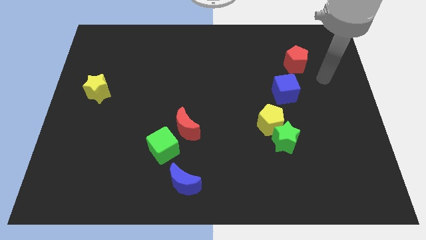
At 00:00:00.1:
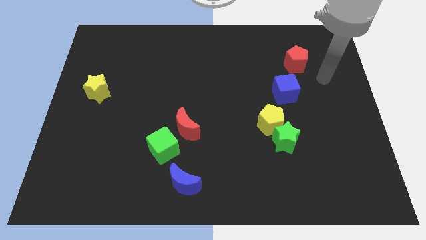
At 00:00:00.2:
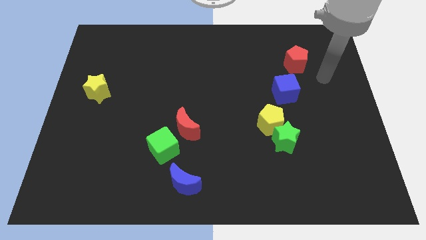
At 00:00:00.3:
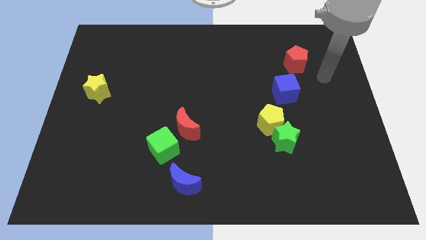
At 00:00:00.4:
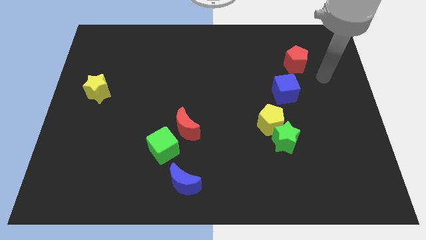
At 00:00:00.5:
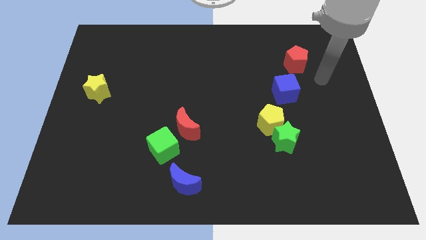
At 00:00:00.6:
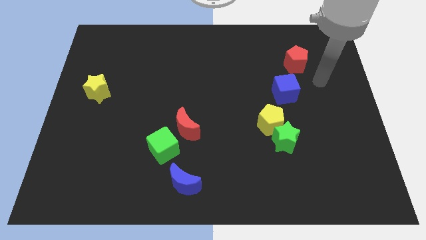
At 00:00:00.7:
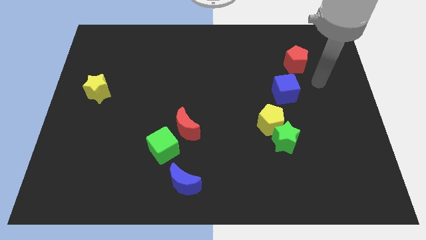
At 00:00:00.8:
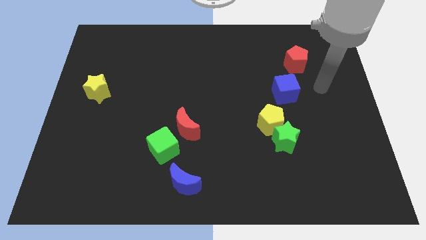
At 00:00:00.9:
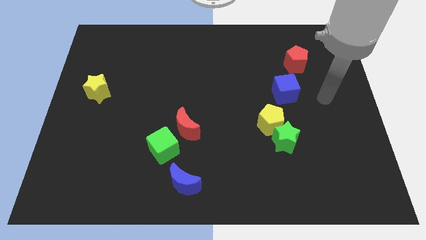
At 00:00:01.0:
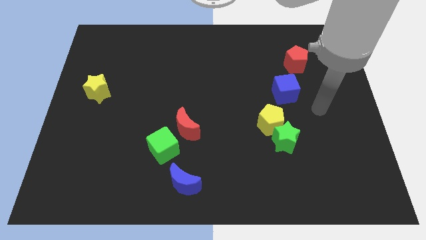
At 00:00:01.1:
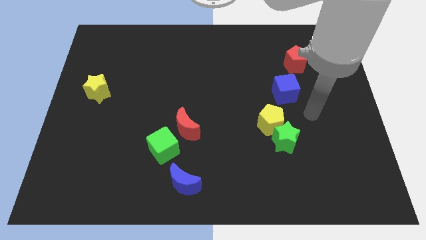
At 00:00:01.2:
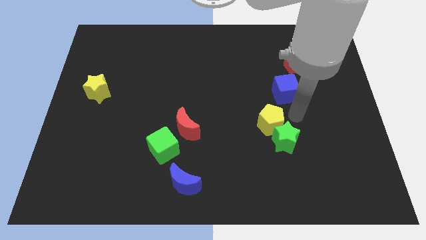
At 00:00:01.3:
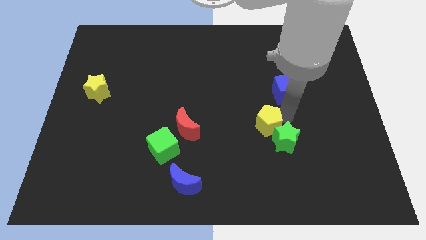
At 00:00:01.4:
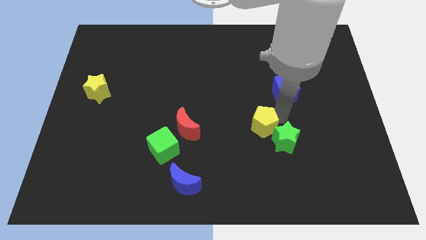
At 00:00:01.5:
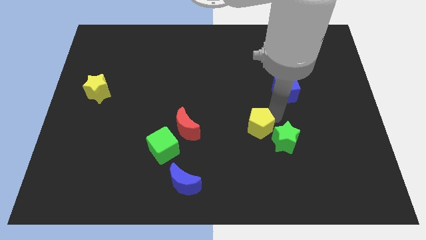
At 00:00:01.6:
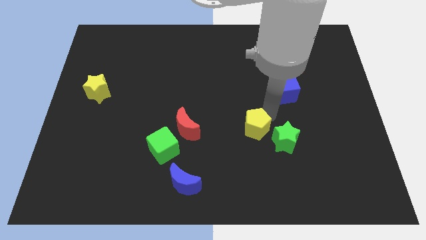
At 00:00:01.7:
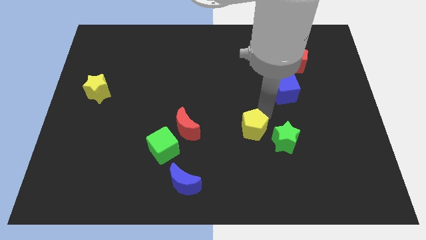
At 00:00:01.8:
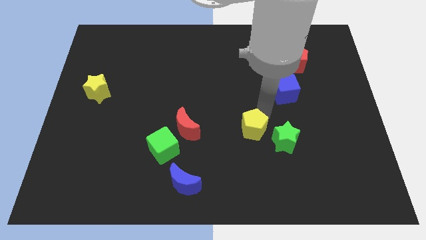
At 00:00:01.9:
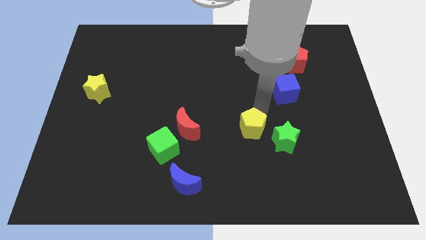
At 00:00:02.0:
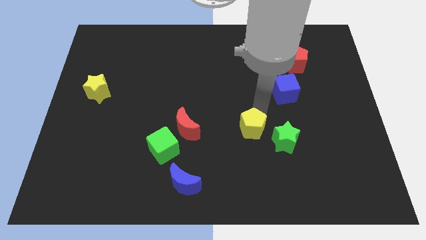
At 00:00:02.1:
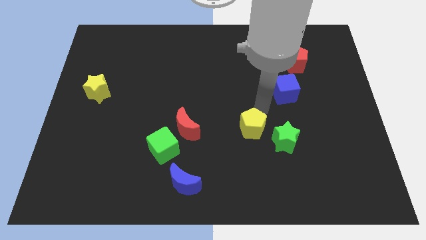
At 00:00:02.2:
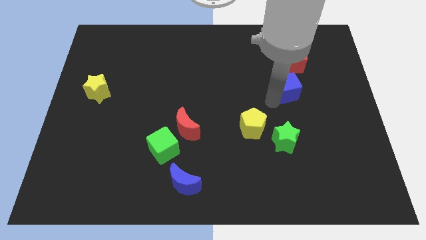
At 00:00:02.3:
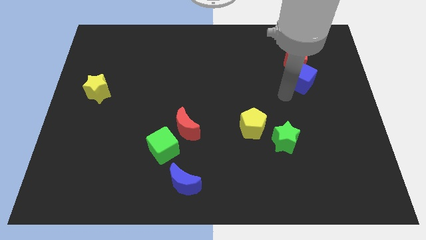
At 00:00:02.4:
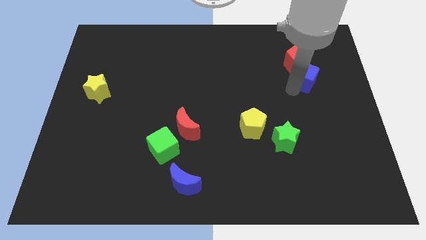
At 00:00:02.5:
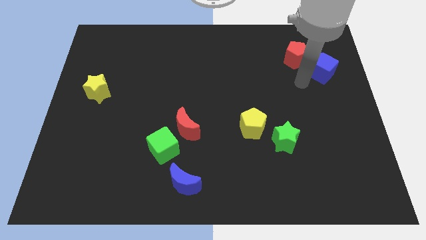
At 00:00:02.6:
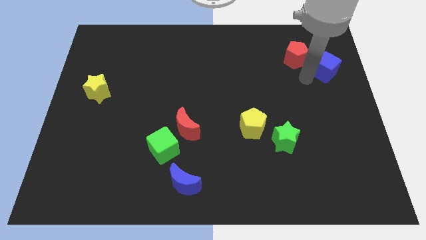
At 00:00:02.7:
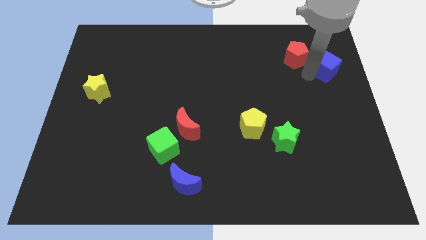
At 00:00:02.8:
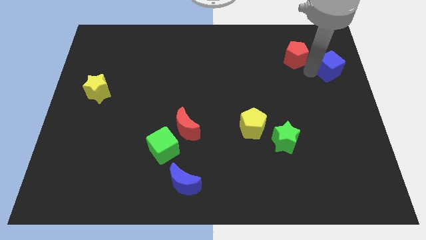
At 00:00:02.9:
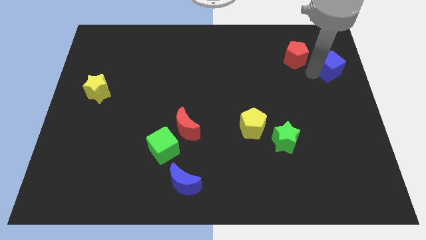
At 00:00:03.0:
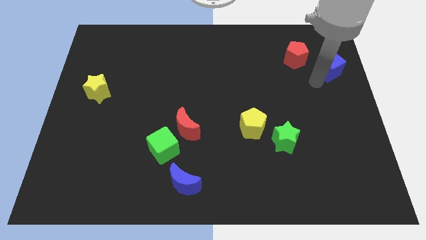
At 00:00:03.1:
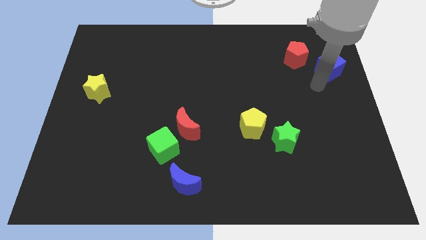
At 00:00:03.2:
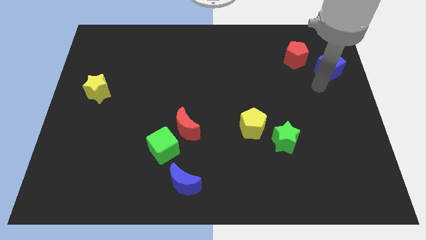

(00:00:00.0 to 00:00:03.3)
move the yellow pentagon and the blue cube away from each other

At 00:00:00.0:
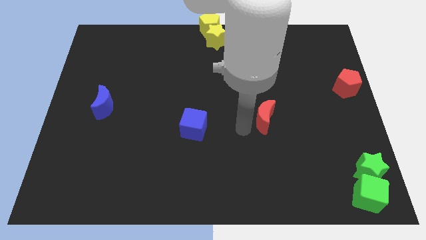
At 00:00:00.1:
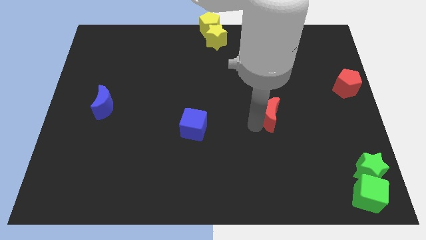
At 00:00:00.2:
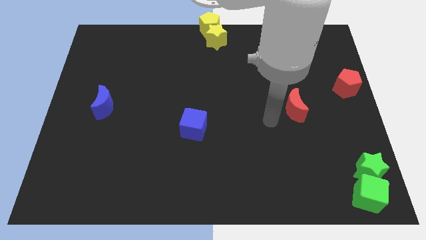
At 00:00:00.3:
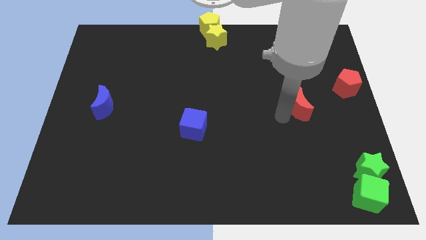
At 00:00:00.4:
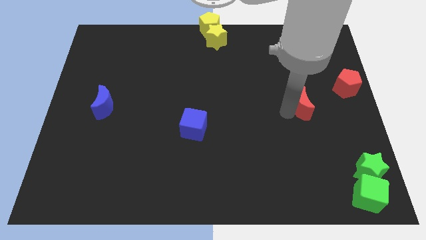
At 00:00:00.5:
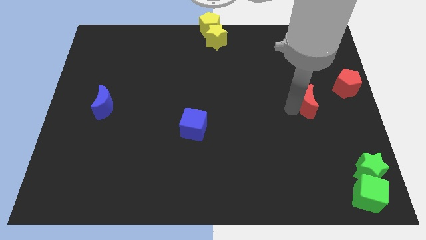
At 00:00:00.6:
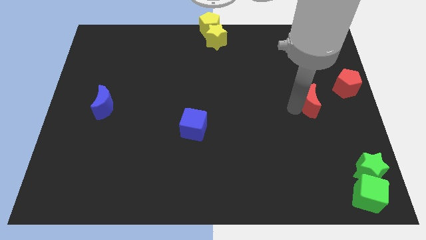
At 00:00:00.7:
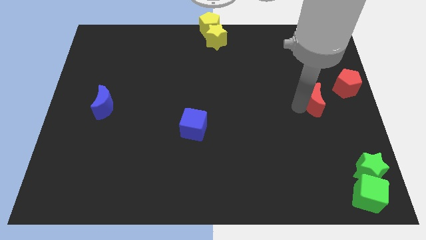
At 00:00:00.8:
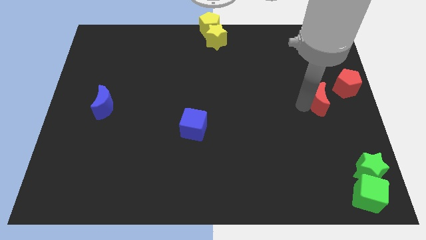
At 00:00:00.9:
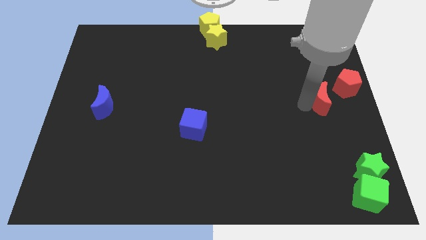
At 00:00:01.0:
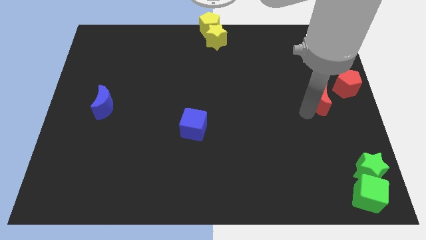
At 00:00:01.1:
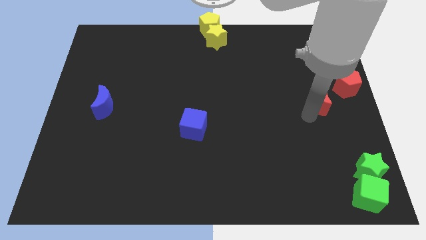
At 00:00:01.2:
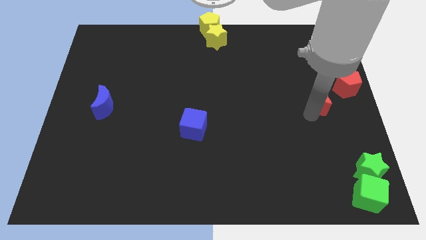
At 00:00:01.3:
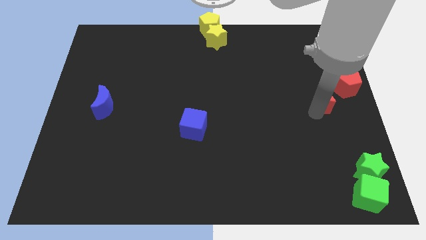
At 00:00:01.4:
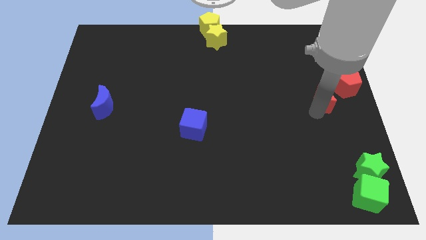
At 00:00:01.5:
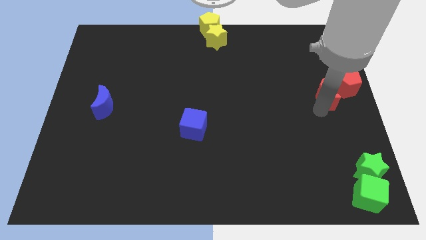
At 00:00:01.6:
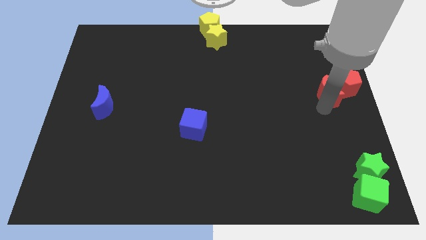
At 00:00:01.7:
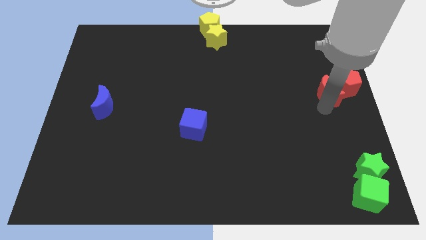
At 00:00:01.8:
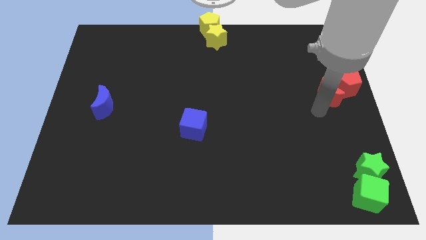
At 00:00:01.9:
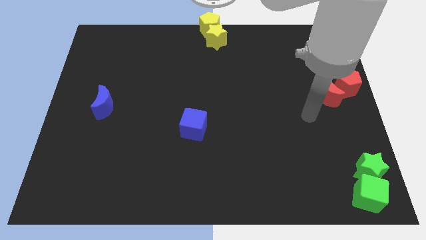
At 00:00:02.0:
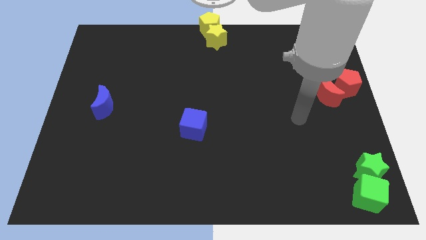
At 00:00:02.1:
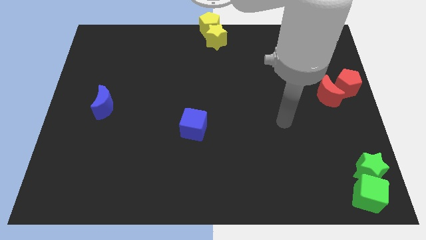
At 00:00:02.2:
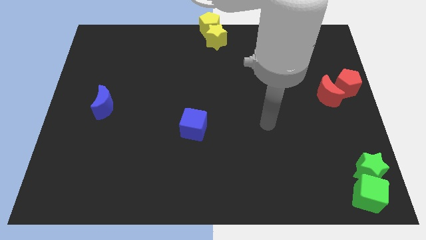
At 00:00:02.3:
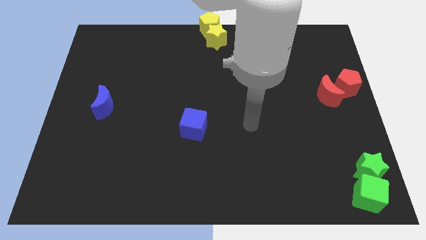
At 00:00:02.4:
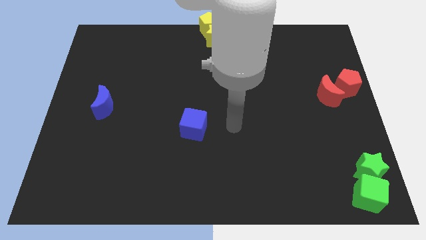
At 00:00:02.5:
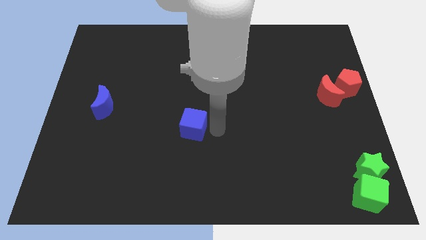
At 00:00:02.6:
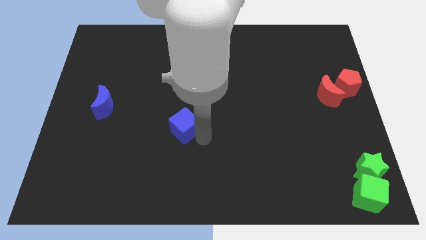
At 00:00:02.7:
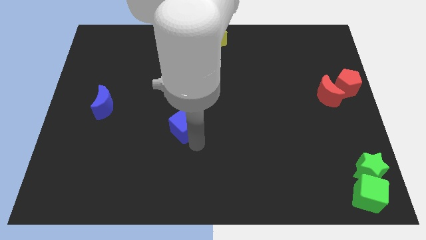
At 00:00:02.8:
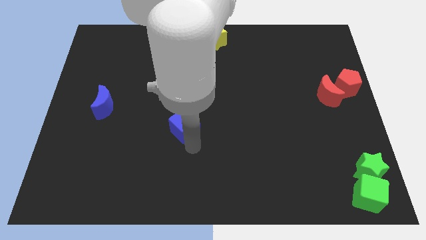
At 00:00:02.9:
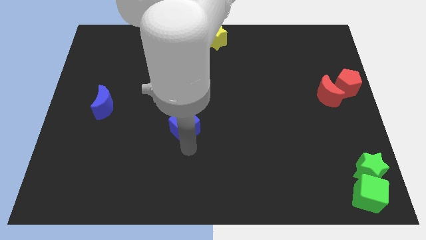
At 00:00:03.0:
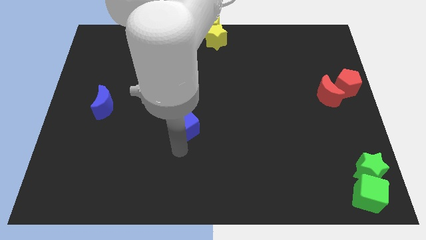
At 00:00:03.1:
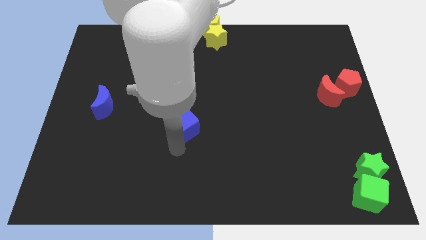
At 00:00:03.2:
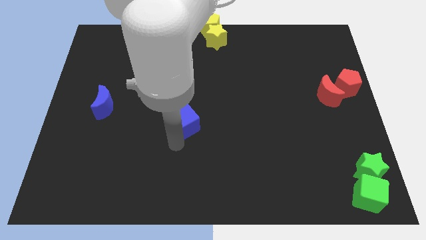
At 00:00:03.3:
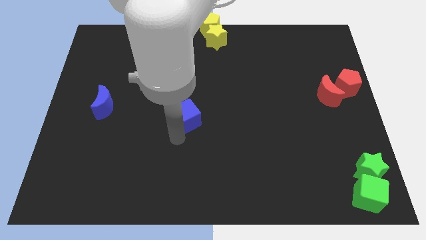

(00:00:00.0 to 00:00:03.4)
place the red crescent near the red pentagon

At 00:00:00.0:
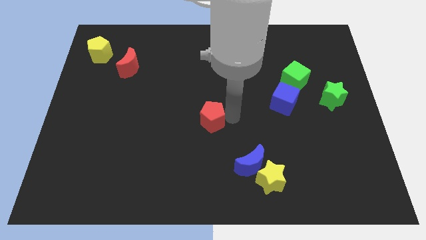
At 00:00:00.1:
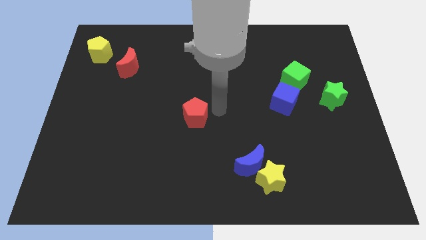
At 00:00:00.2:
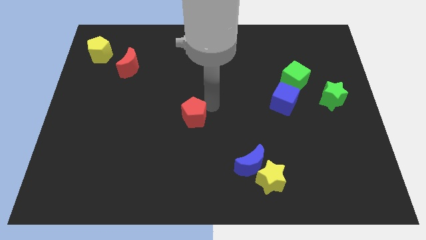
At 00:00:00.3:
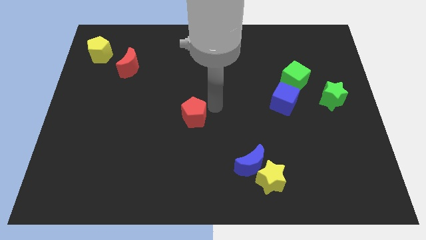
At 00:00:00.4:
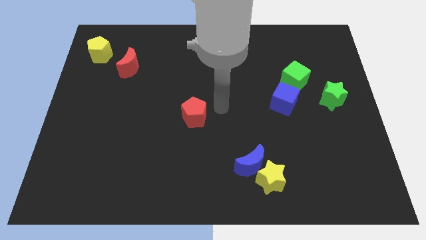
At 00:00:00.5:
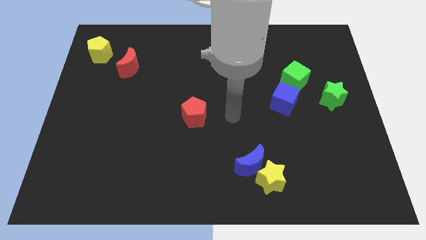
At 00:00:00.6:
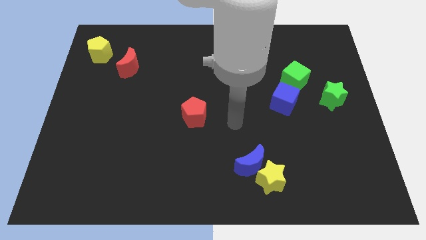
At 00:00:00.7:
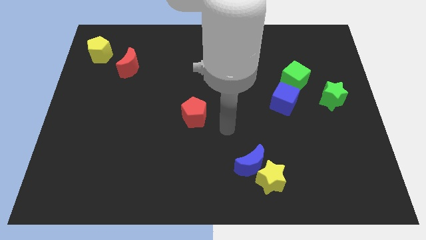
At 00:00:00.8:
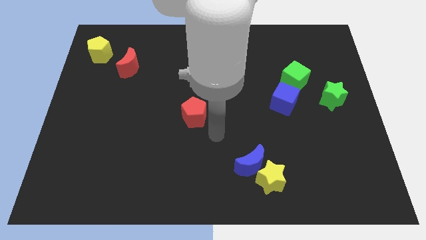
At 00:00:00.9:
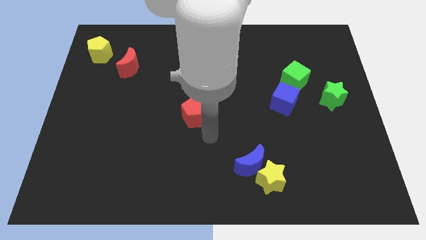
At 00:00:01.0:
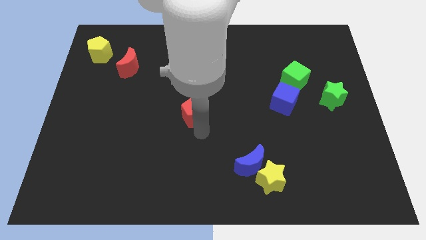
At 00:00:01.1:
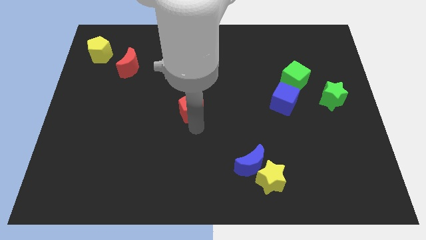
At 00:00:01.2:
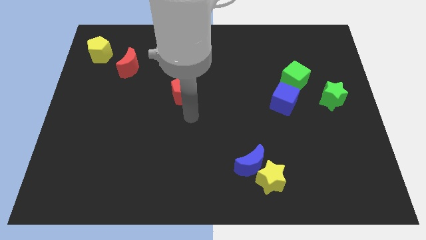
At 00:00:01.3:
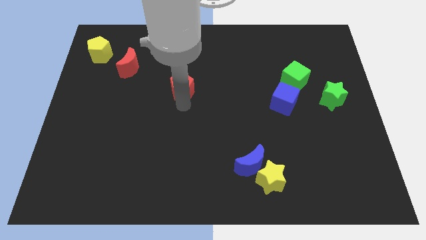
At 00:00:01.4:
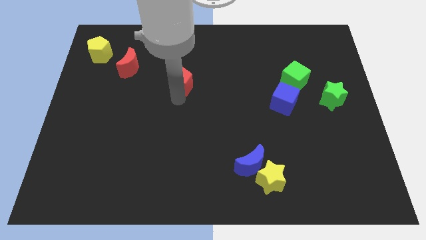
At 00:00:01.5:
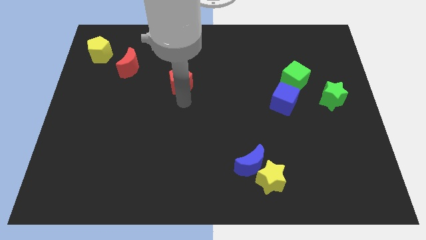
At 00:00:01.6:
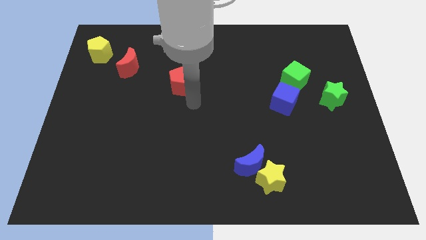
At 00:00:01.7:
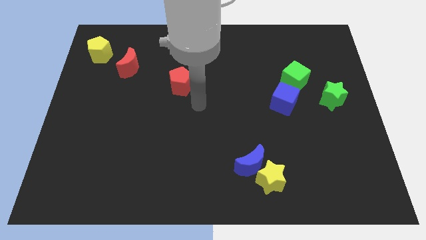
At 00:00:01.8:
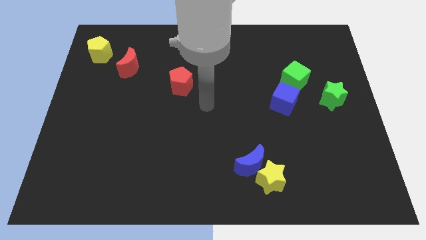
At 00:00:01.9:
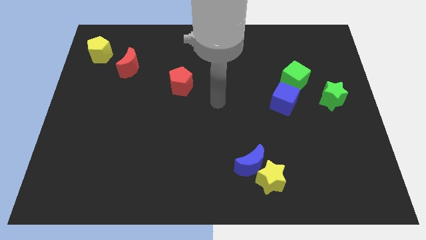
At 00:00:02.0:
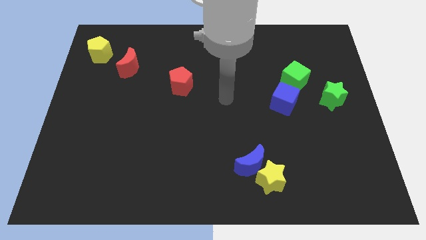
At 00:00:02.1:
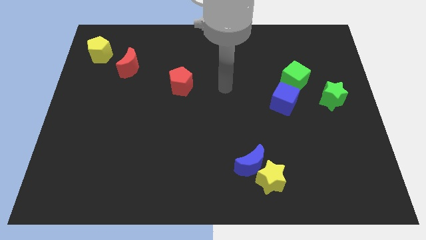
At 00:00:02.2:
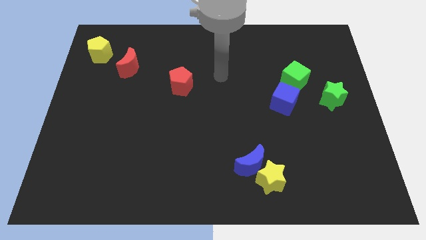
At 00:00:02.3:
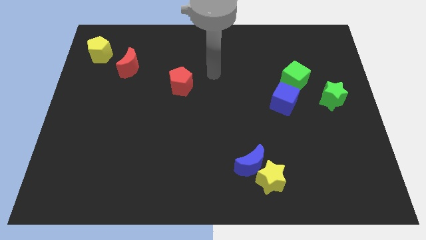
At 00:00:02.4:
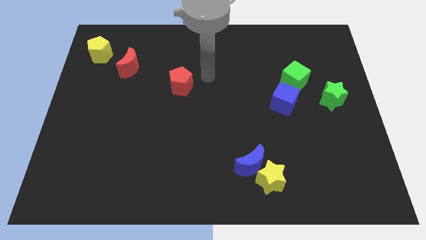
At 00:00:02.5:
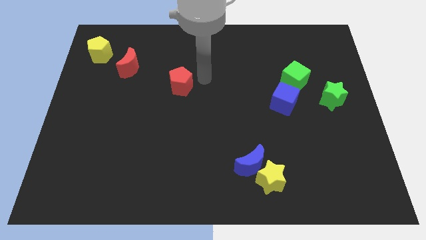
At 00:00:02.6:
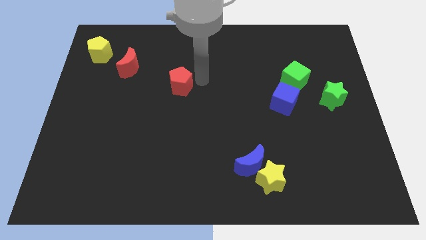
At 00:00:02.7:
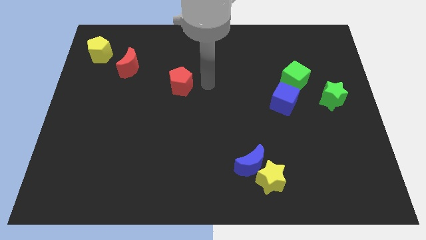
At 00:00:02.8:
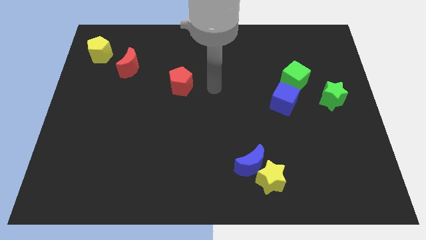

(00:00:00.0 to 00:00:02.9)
push red pentagon towards top of the board
